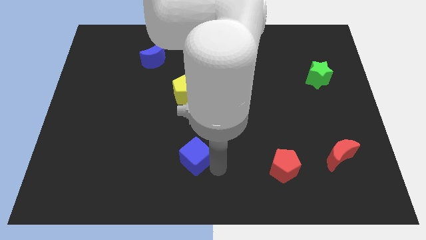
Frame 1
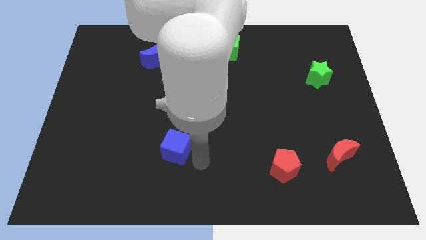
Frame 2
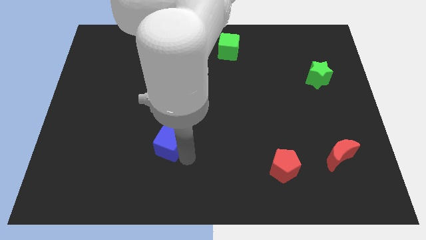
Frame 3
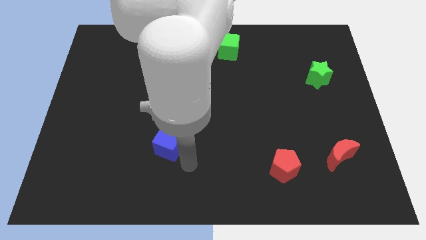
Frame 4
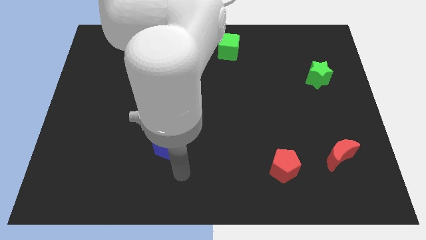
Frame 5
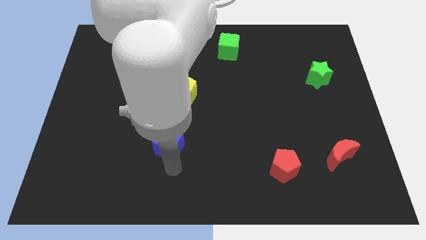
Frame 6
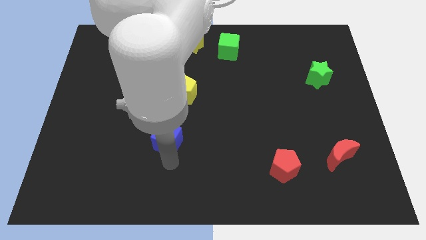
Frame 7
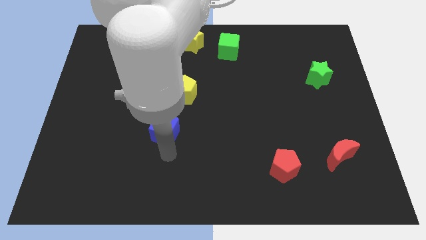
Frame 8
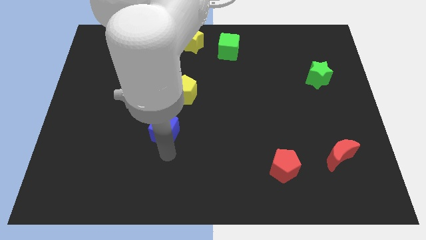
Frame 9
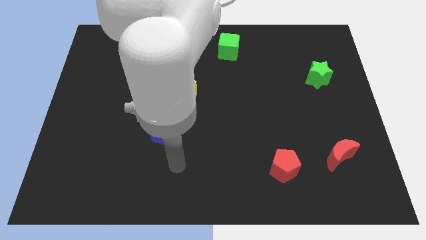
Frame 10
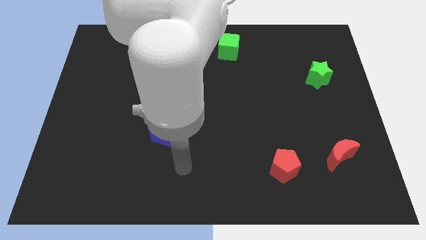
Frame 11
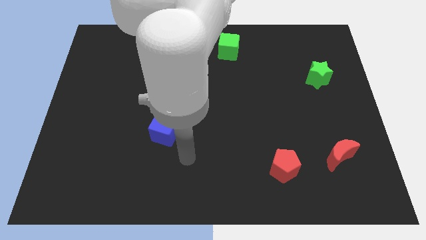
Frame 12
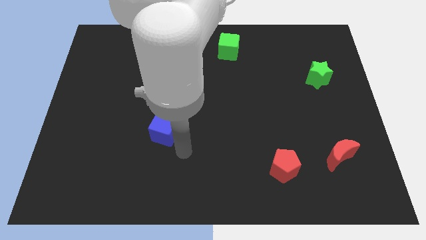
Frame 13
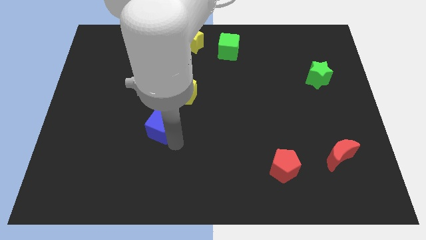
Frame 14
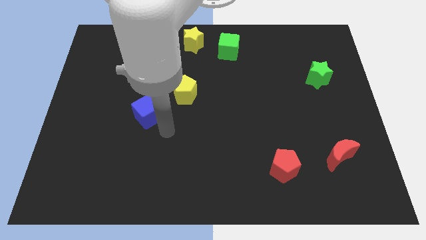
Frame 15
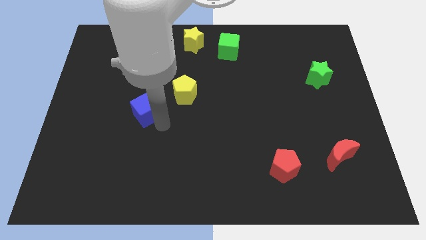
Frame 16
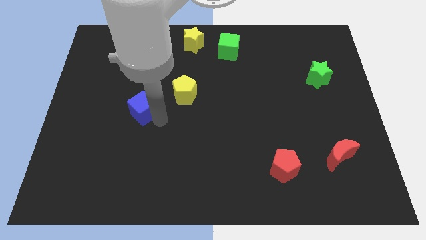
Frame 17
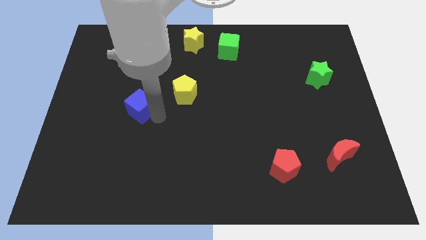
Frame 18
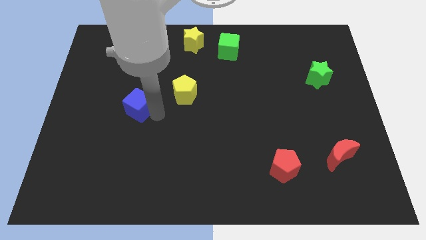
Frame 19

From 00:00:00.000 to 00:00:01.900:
slide the blue cube diagonally bottom left to the yellow pentagon

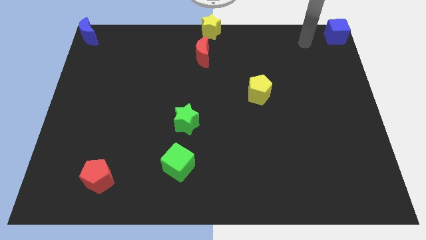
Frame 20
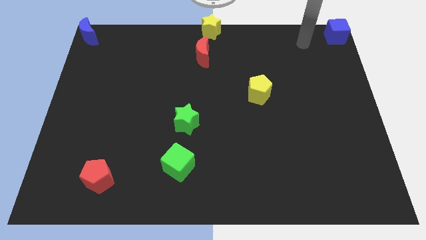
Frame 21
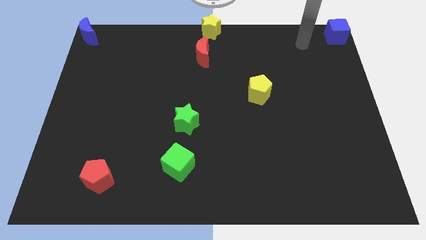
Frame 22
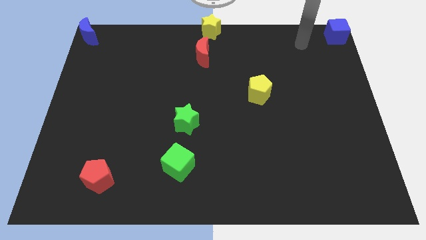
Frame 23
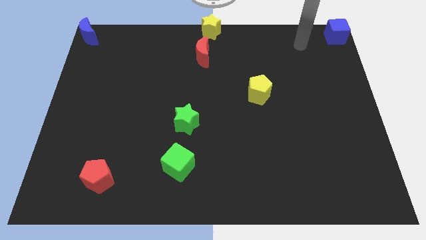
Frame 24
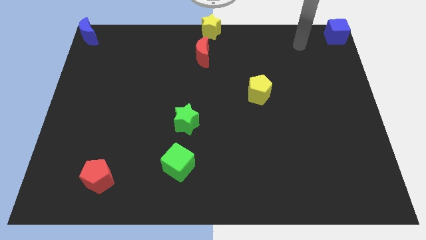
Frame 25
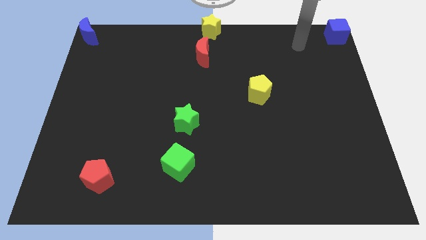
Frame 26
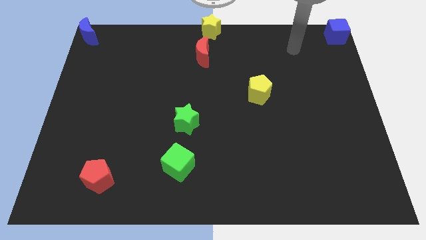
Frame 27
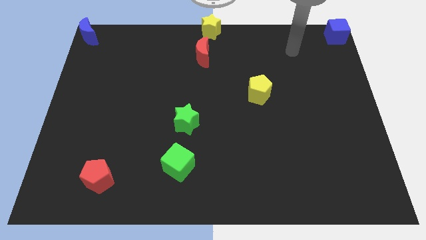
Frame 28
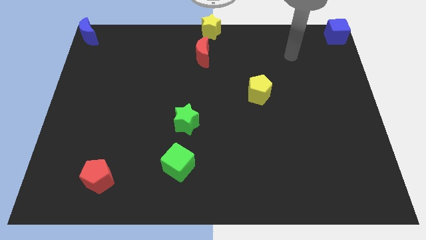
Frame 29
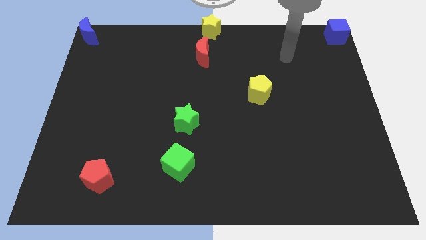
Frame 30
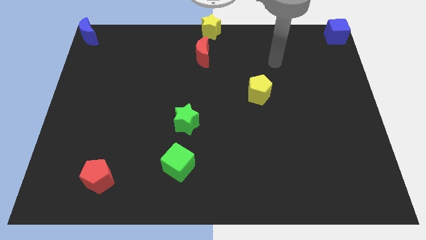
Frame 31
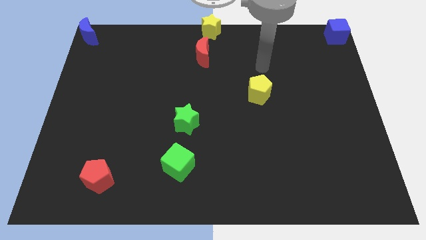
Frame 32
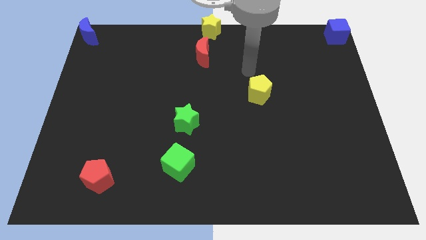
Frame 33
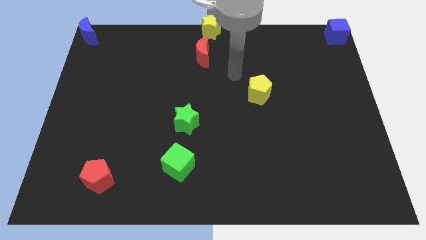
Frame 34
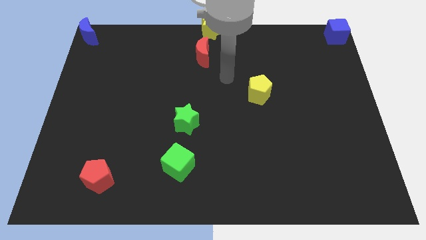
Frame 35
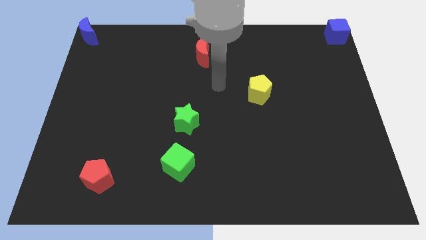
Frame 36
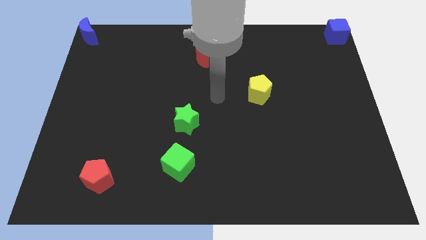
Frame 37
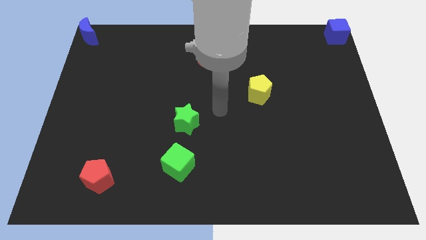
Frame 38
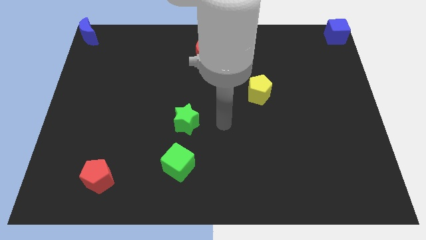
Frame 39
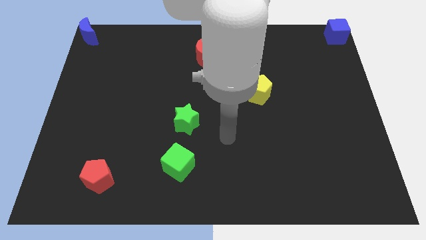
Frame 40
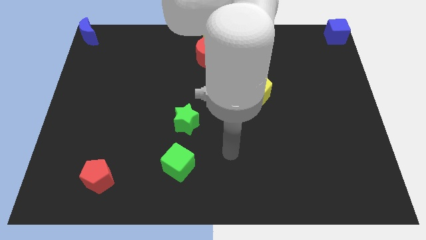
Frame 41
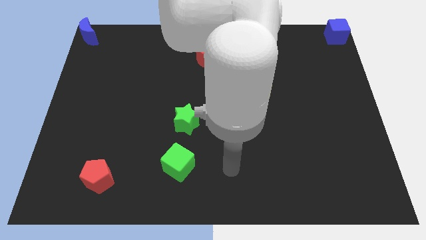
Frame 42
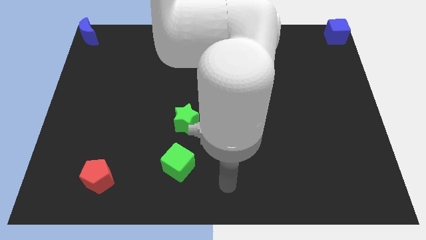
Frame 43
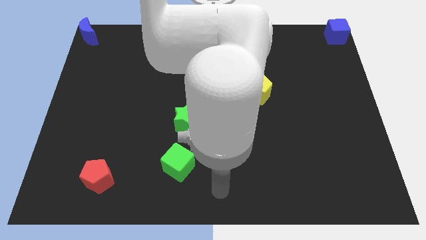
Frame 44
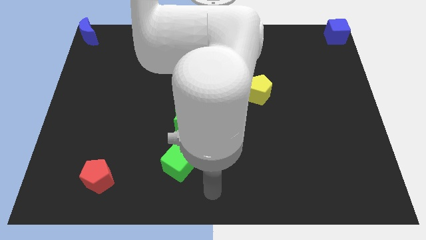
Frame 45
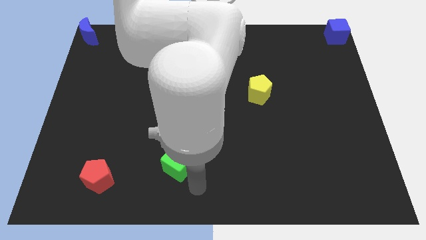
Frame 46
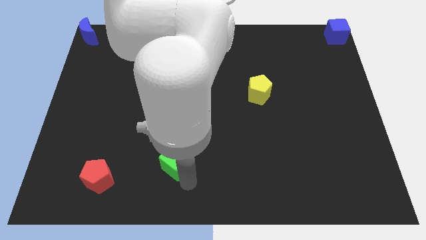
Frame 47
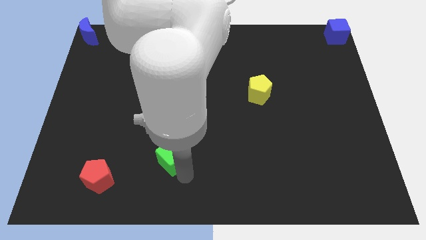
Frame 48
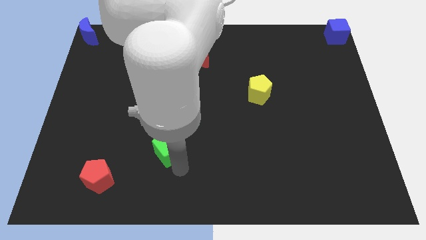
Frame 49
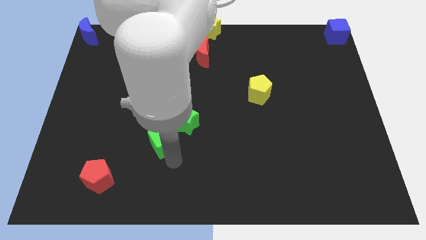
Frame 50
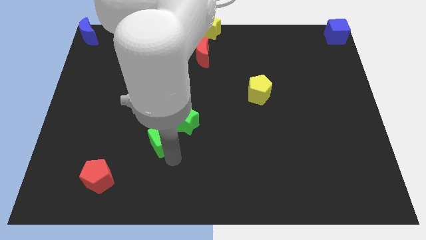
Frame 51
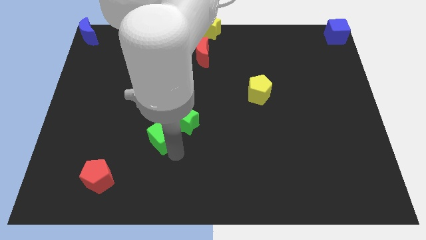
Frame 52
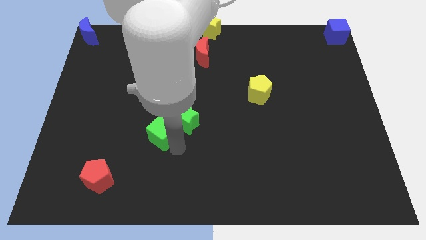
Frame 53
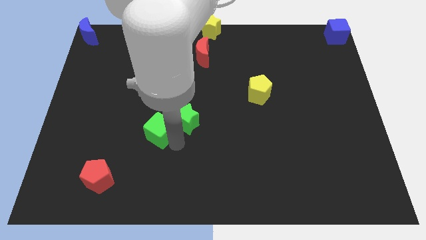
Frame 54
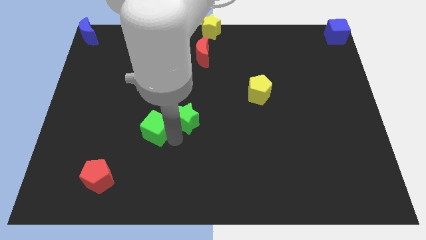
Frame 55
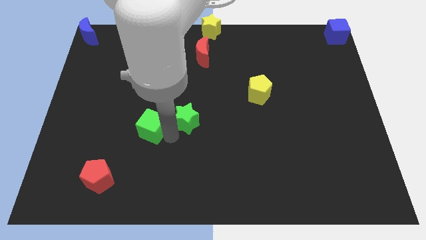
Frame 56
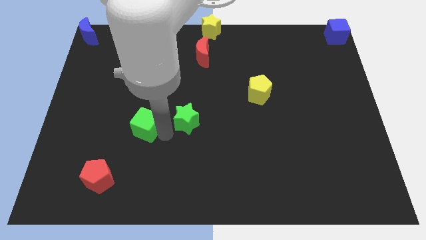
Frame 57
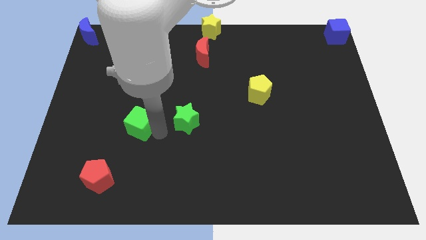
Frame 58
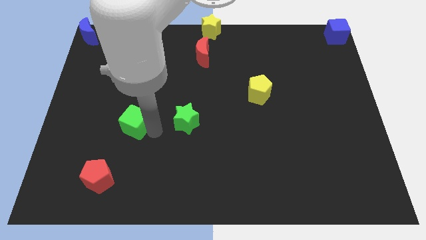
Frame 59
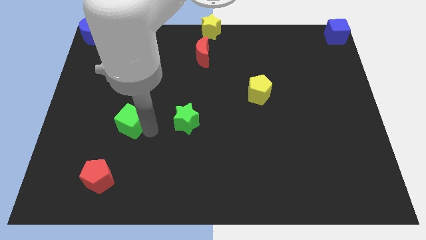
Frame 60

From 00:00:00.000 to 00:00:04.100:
place the green cube to the left side of the green star

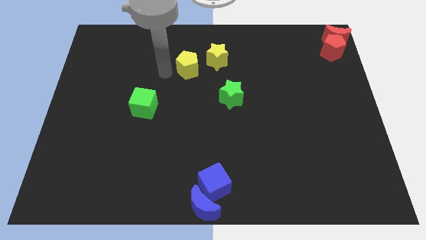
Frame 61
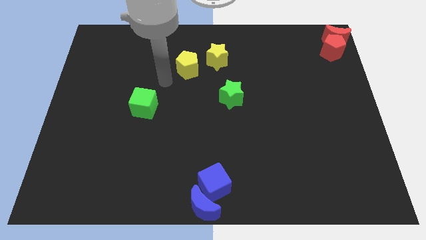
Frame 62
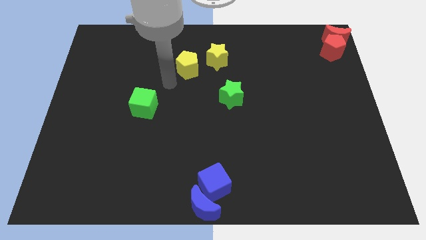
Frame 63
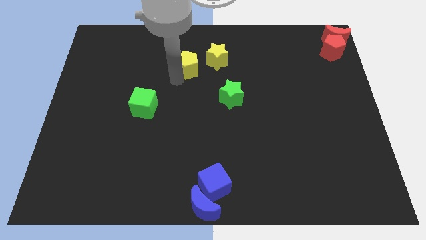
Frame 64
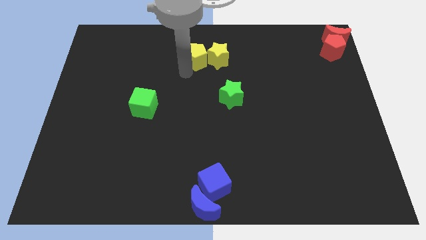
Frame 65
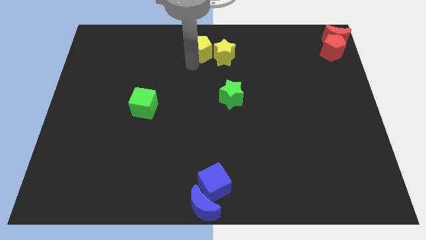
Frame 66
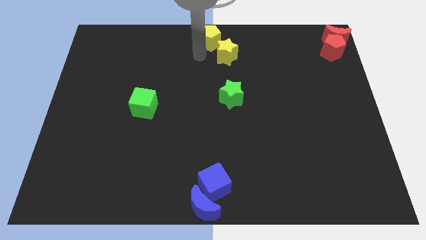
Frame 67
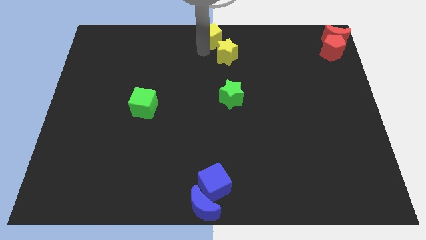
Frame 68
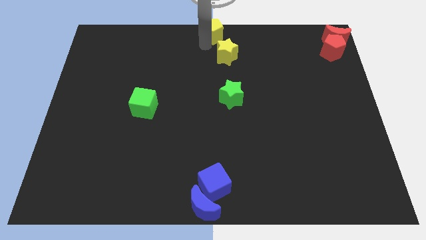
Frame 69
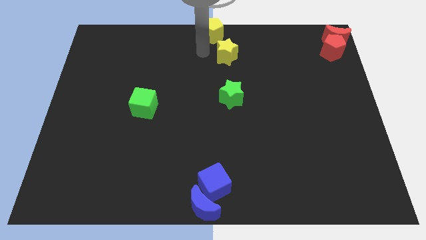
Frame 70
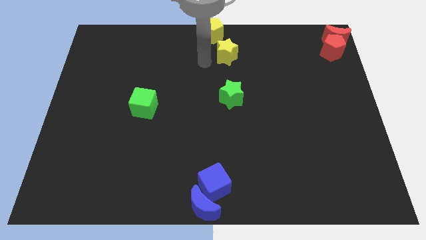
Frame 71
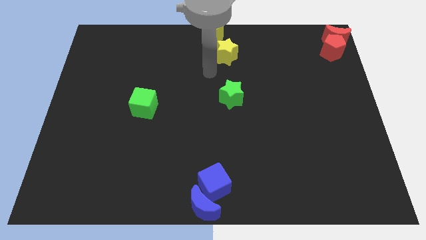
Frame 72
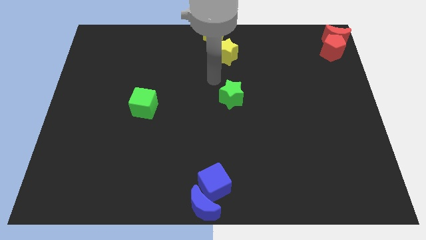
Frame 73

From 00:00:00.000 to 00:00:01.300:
move the yellow pentagon to the top of the yellow star

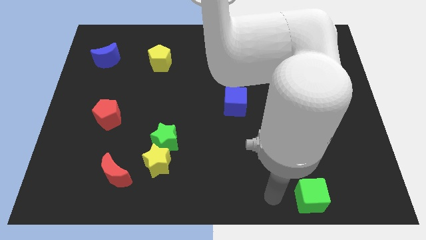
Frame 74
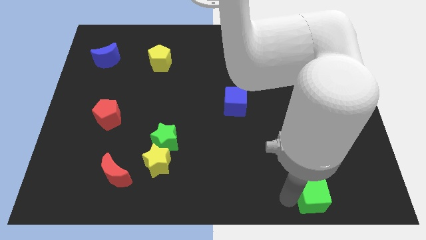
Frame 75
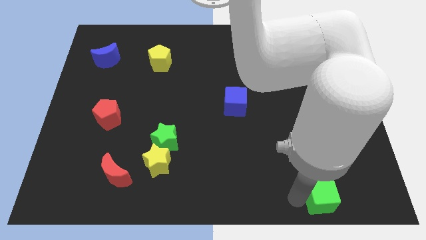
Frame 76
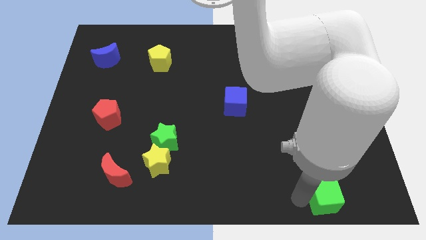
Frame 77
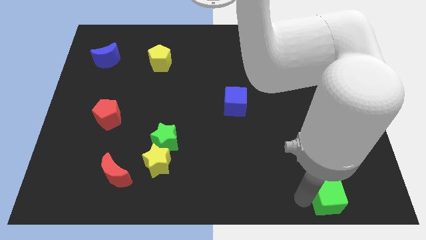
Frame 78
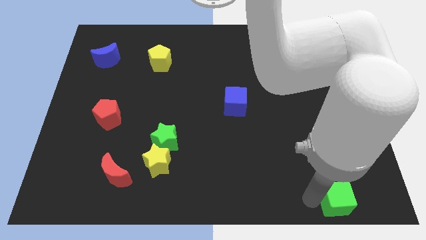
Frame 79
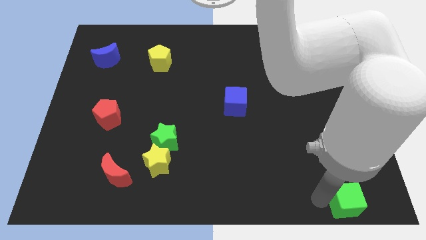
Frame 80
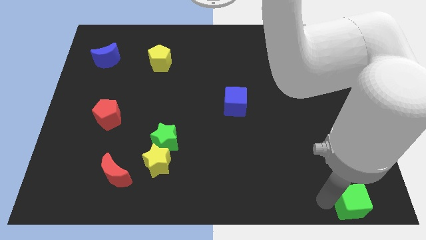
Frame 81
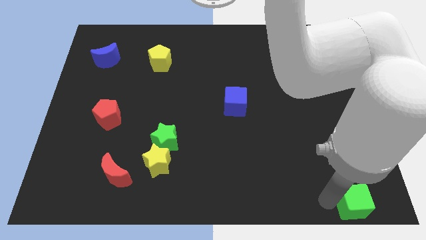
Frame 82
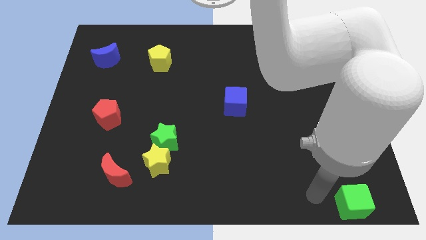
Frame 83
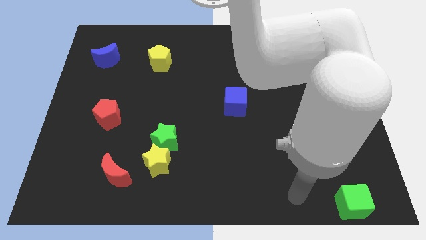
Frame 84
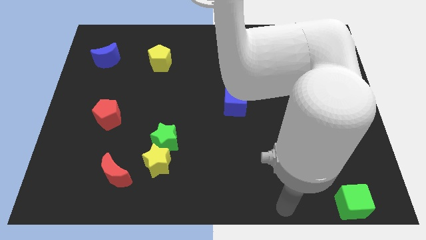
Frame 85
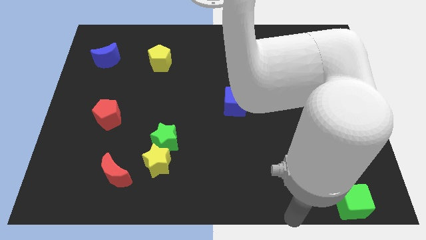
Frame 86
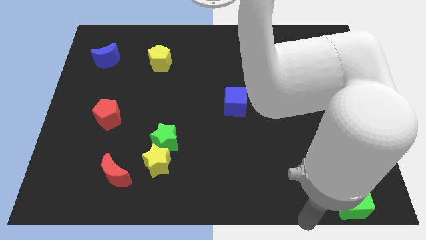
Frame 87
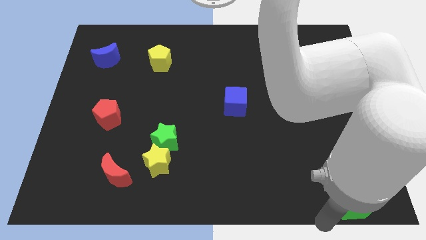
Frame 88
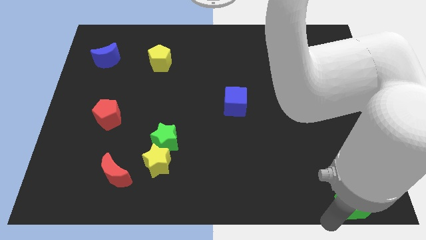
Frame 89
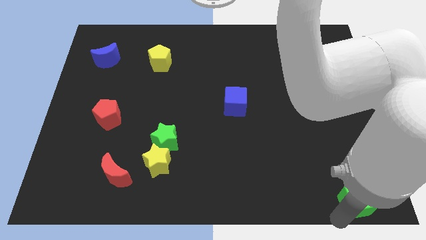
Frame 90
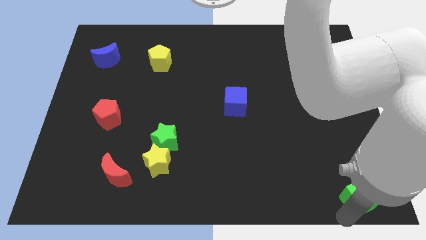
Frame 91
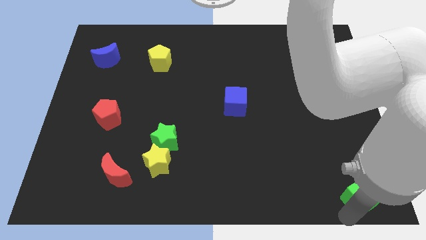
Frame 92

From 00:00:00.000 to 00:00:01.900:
move green cube to the bottom right corner of the board
